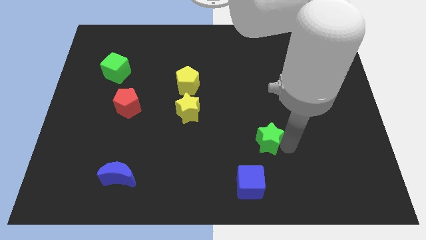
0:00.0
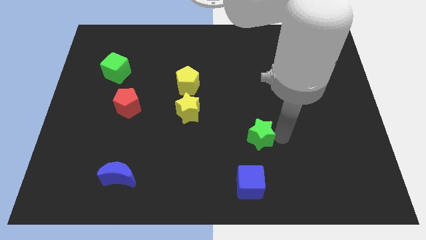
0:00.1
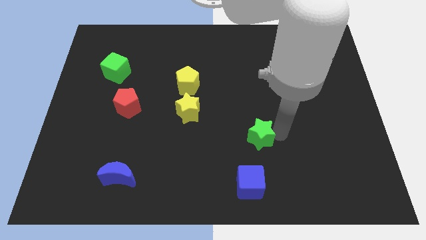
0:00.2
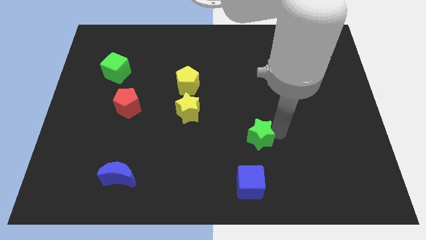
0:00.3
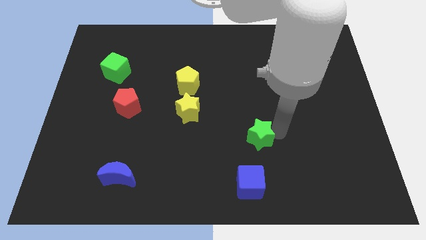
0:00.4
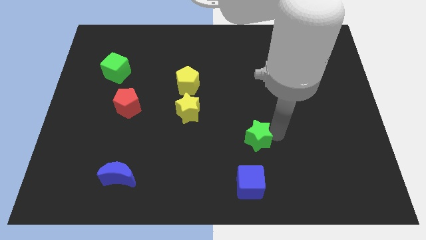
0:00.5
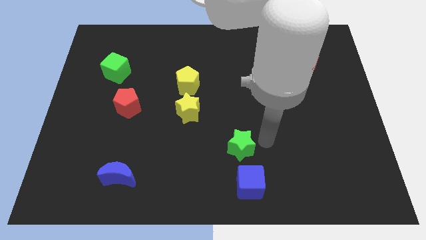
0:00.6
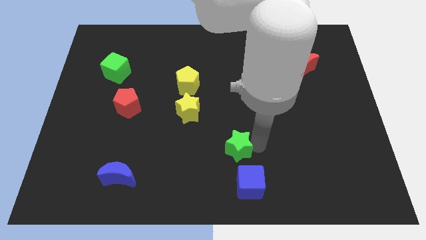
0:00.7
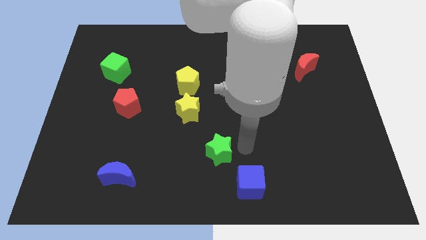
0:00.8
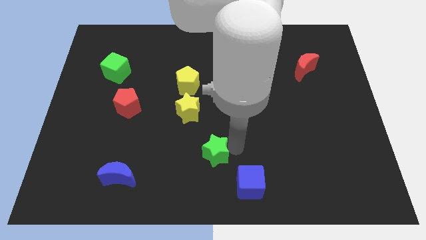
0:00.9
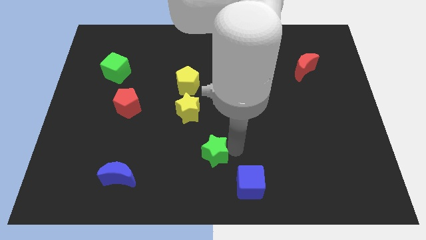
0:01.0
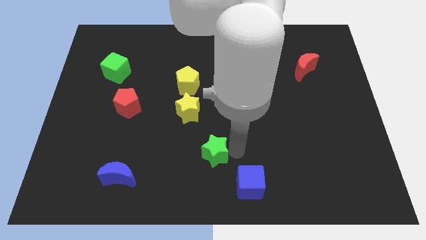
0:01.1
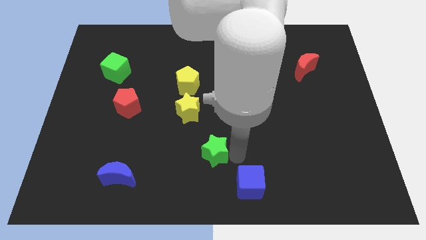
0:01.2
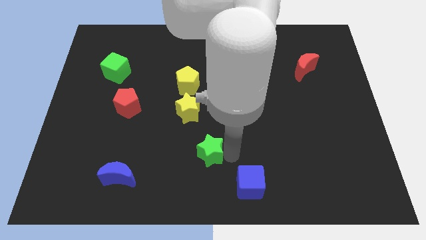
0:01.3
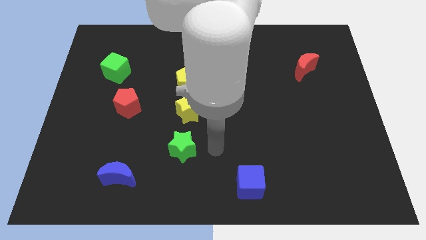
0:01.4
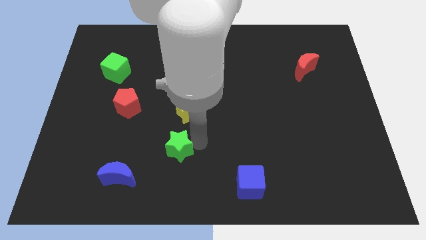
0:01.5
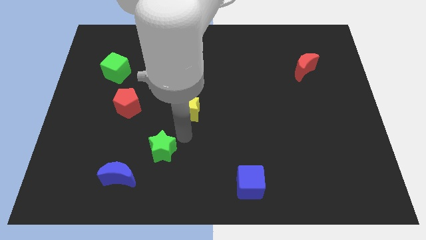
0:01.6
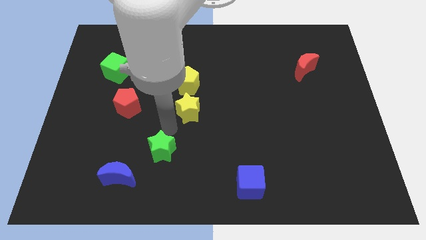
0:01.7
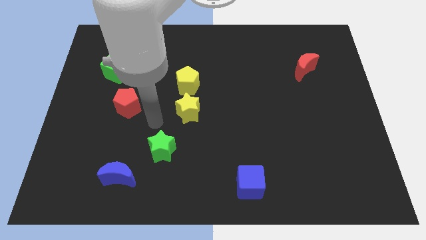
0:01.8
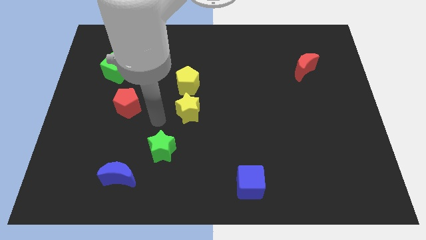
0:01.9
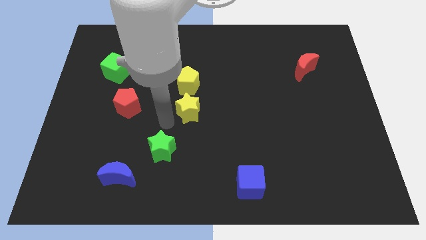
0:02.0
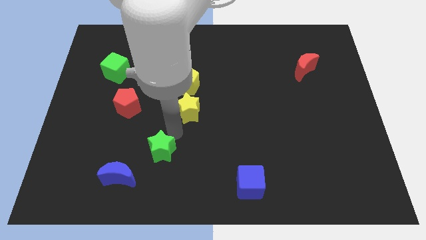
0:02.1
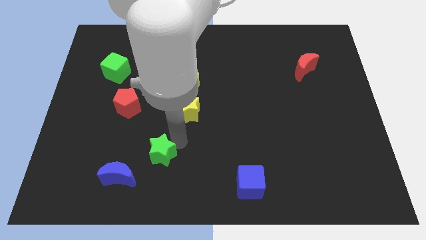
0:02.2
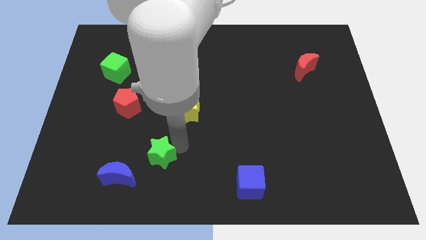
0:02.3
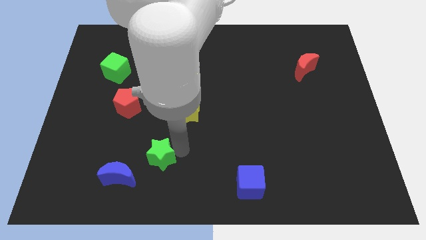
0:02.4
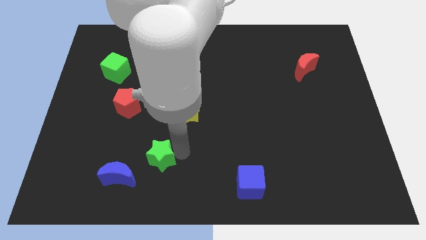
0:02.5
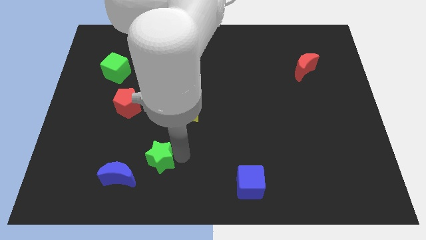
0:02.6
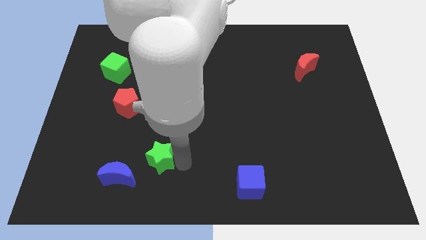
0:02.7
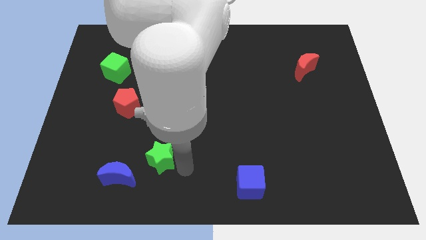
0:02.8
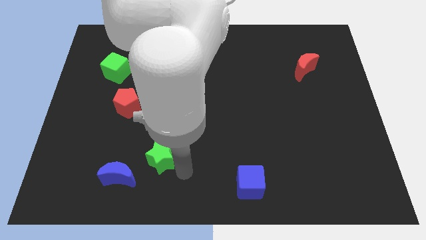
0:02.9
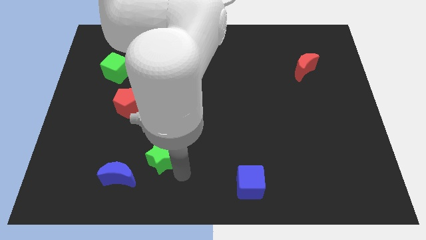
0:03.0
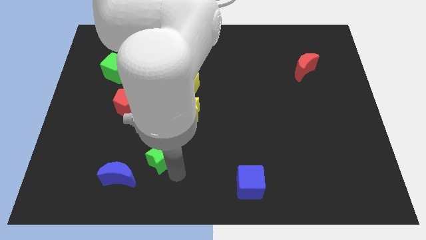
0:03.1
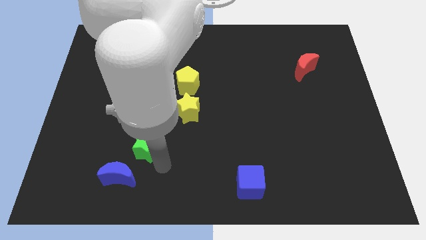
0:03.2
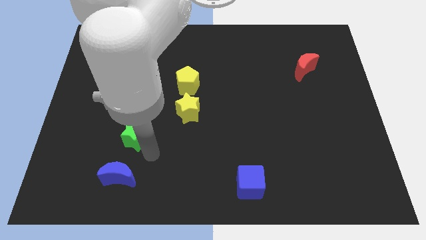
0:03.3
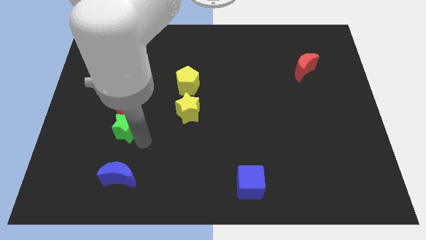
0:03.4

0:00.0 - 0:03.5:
place the green star in between the red pentagon and blue moon

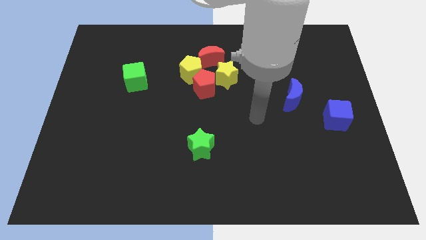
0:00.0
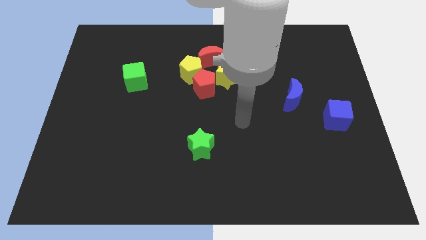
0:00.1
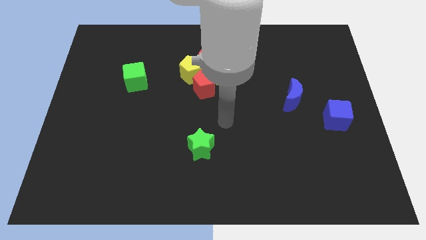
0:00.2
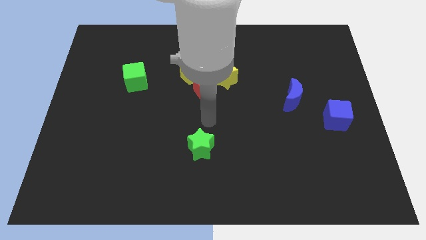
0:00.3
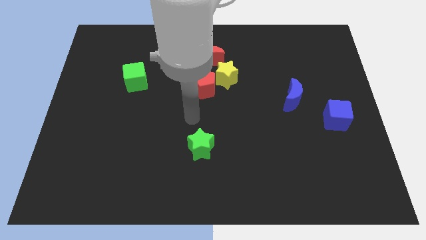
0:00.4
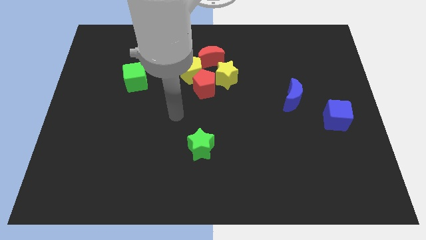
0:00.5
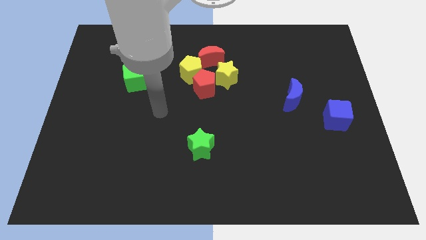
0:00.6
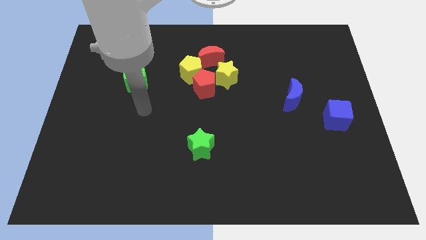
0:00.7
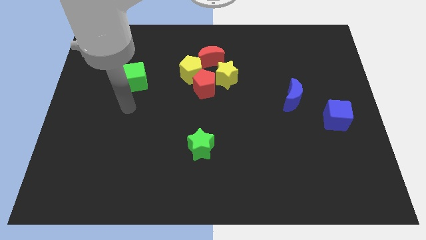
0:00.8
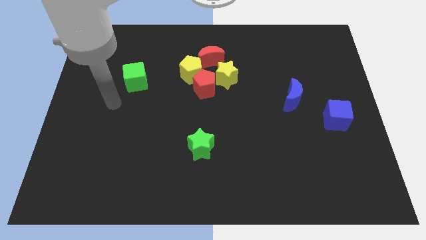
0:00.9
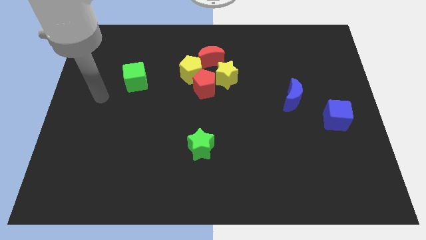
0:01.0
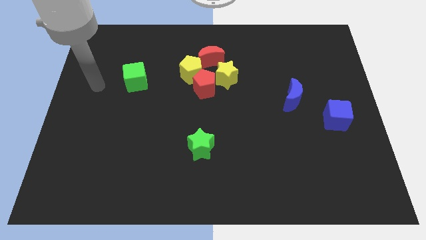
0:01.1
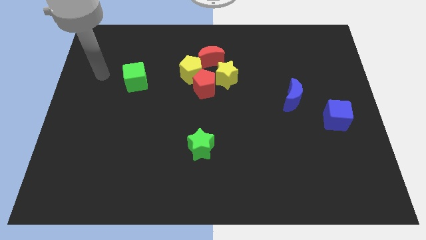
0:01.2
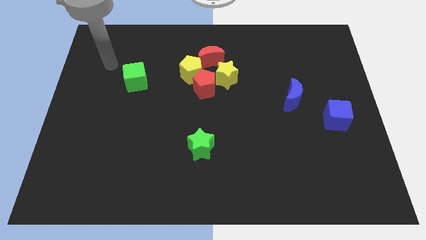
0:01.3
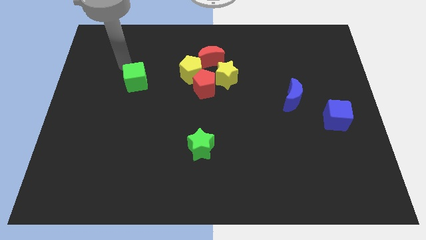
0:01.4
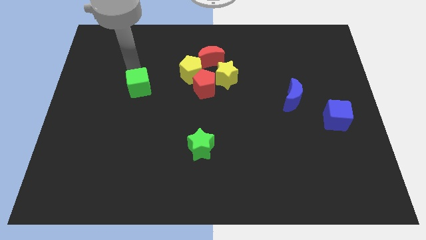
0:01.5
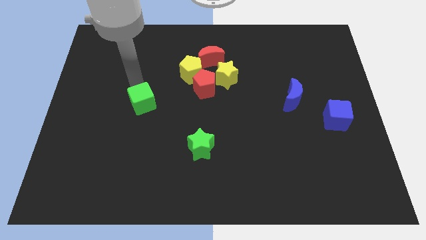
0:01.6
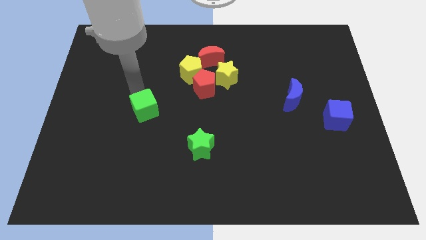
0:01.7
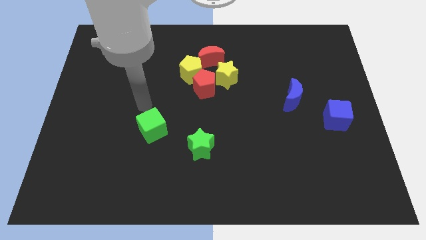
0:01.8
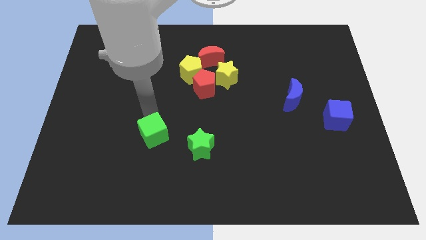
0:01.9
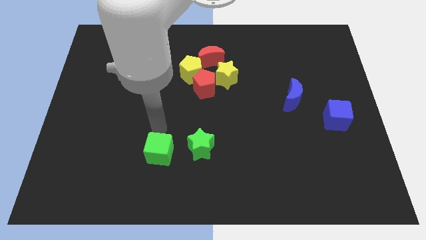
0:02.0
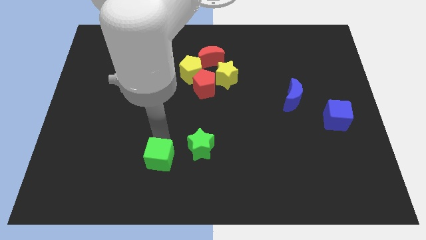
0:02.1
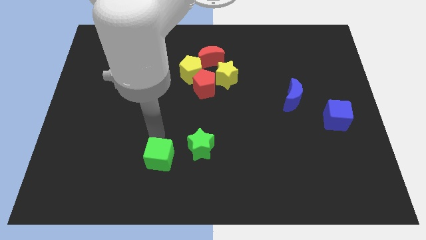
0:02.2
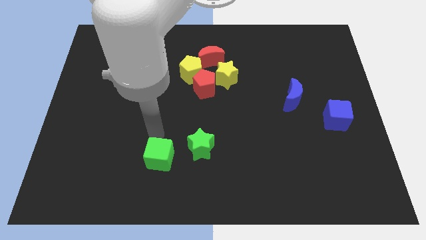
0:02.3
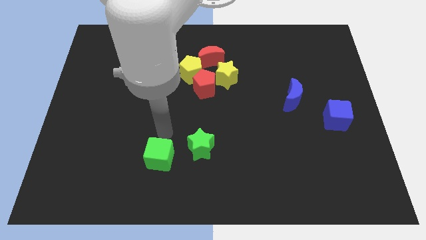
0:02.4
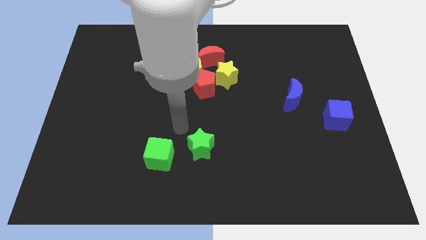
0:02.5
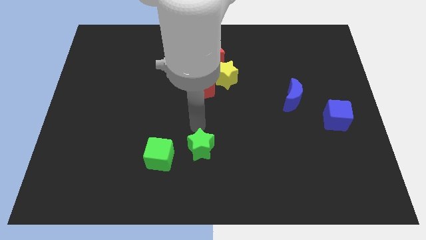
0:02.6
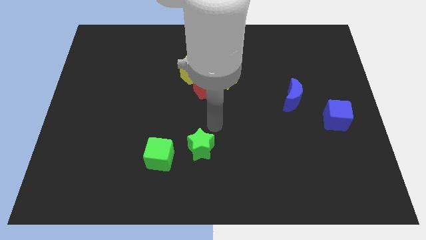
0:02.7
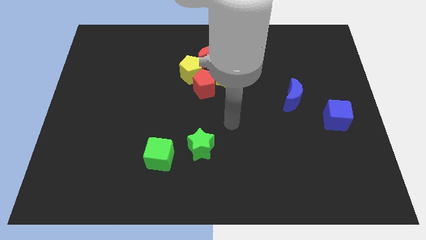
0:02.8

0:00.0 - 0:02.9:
place the green cube diagonally bottom left to green star

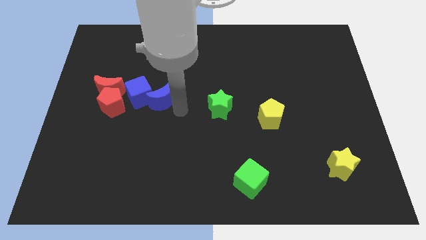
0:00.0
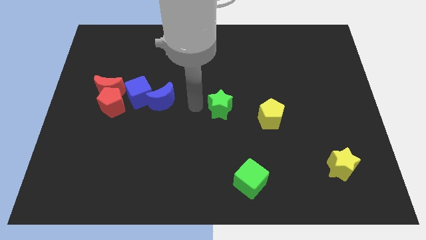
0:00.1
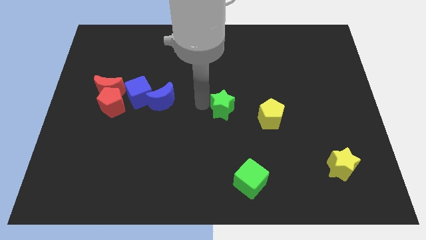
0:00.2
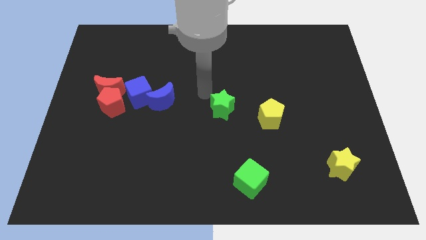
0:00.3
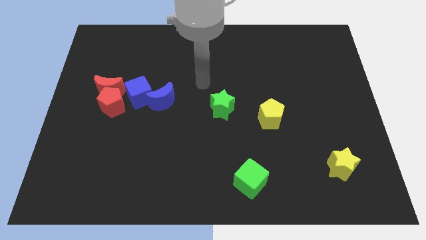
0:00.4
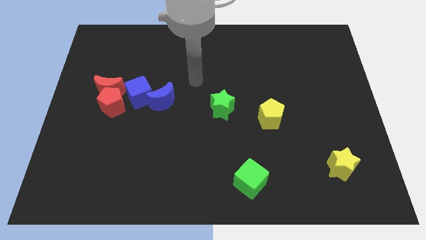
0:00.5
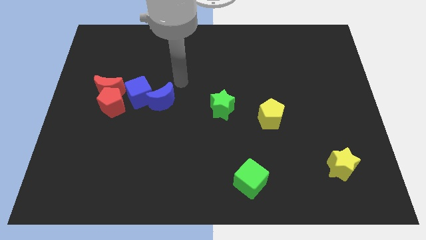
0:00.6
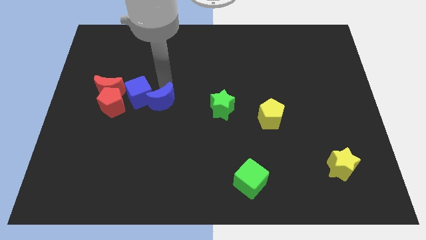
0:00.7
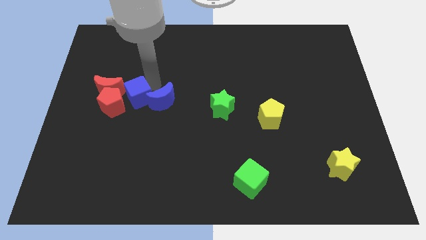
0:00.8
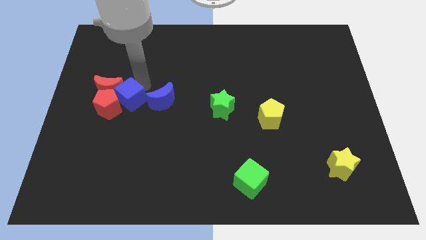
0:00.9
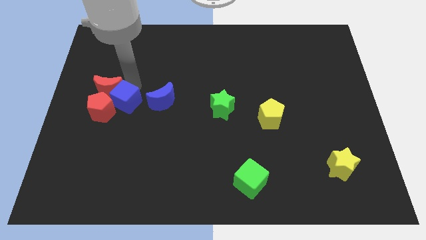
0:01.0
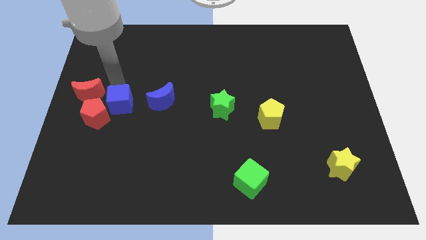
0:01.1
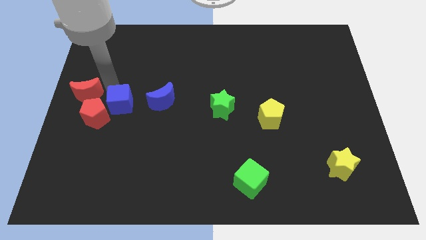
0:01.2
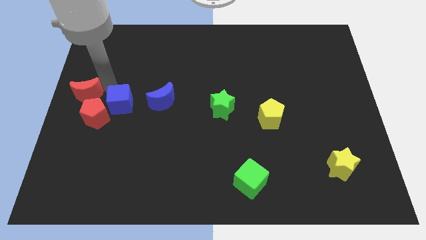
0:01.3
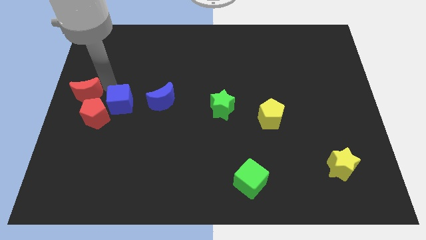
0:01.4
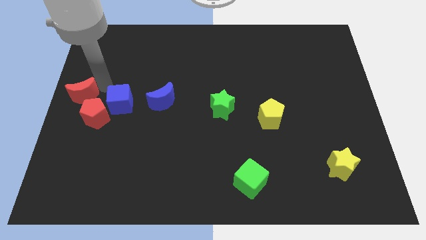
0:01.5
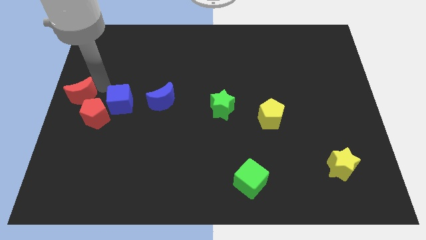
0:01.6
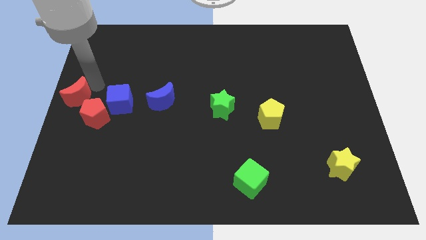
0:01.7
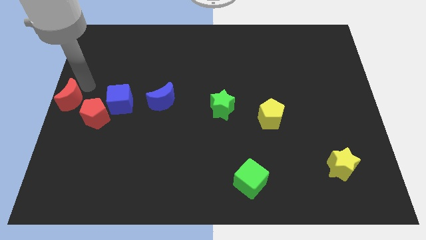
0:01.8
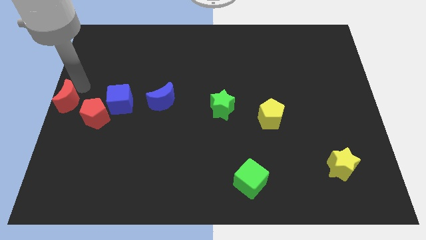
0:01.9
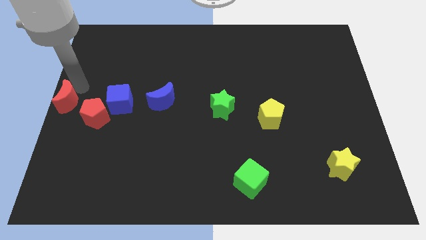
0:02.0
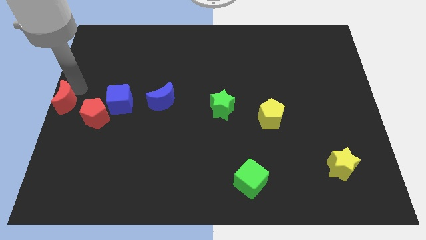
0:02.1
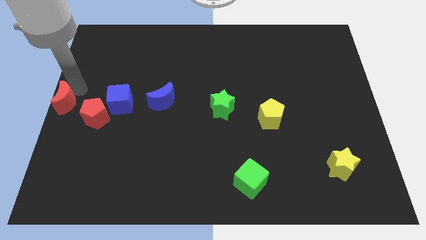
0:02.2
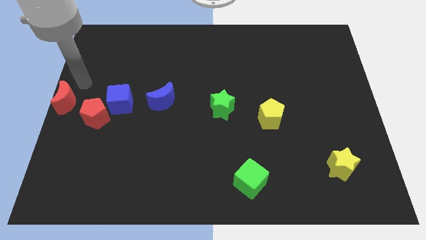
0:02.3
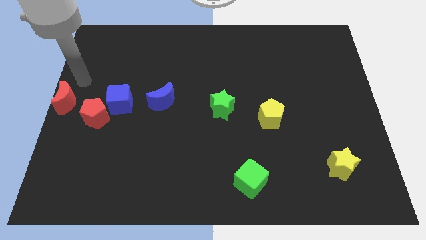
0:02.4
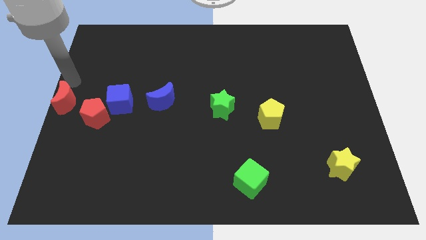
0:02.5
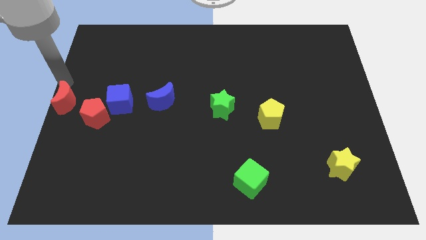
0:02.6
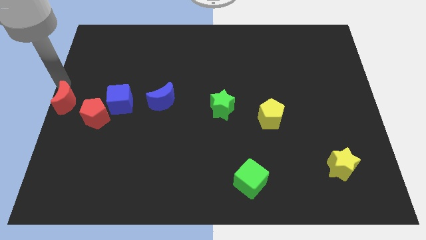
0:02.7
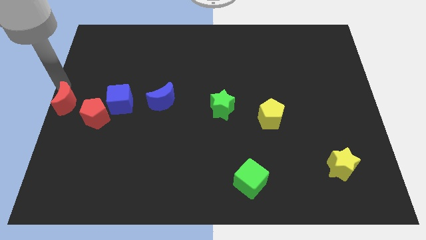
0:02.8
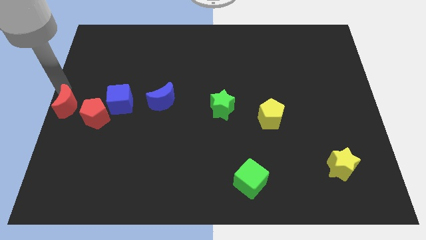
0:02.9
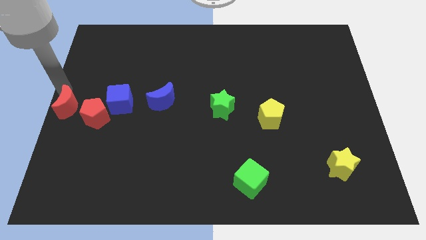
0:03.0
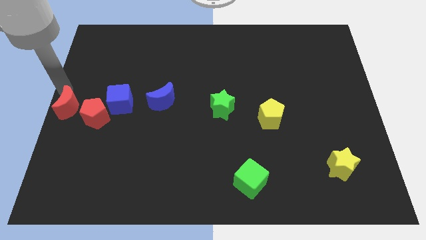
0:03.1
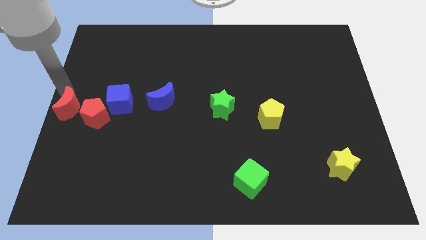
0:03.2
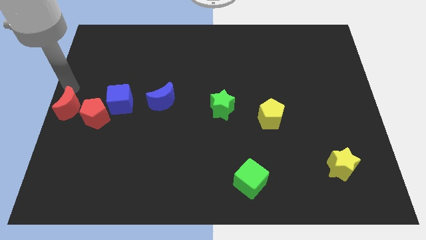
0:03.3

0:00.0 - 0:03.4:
move the re moon to the left of the red pentagon
